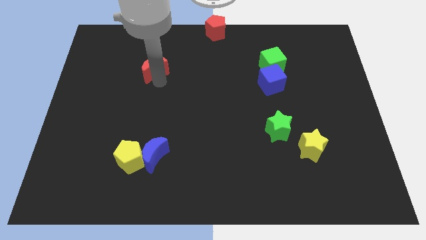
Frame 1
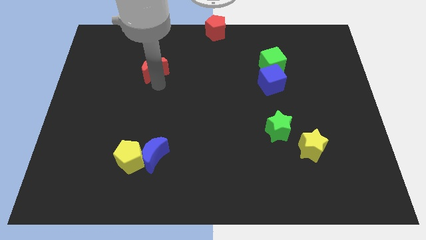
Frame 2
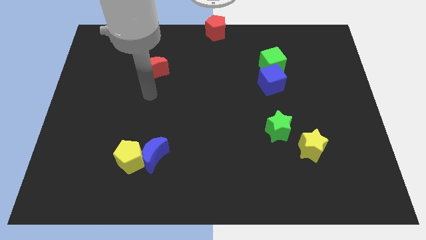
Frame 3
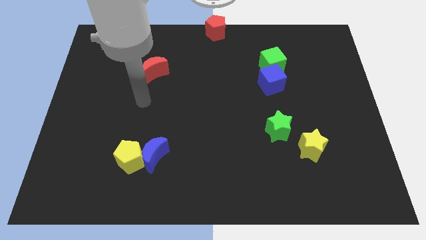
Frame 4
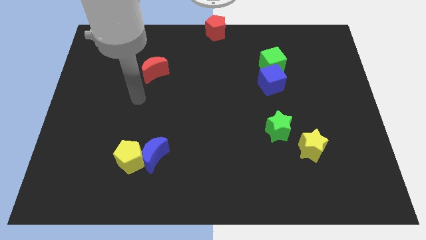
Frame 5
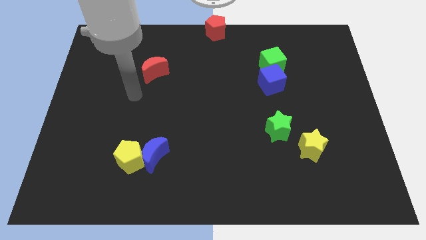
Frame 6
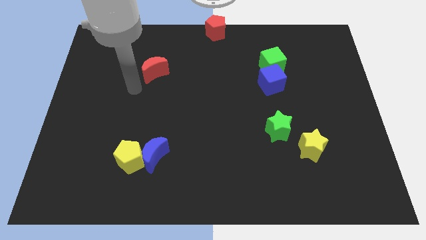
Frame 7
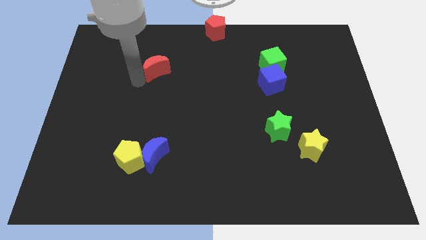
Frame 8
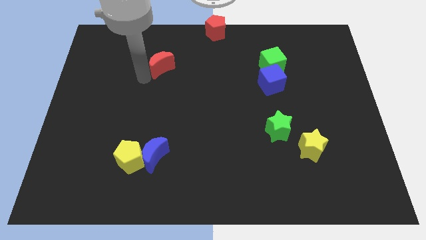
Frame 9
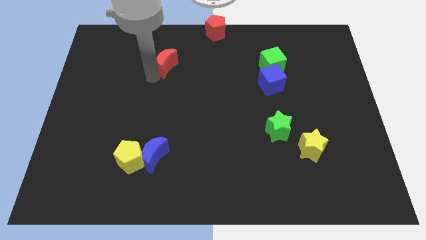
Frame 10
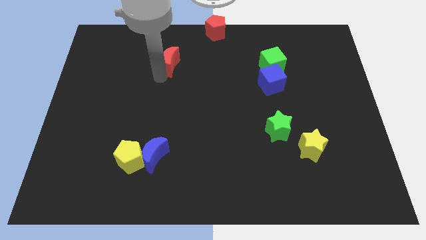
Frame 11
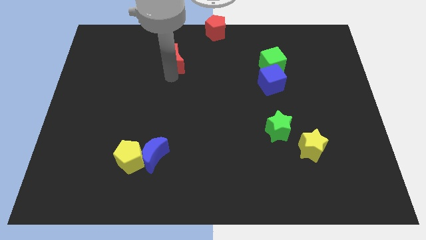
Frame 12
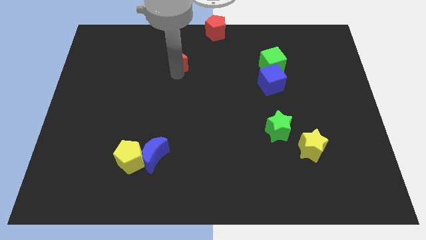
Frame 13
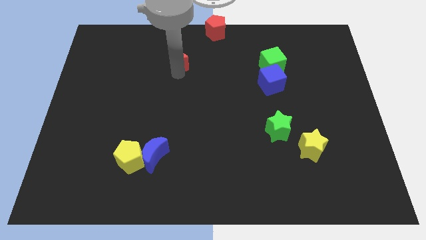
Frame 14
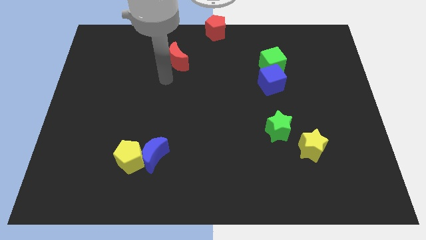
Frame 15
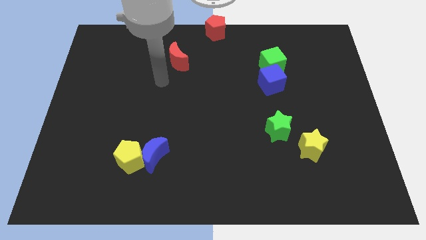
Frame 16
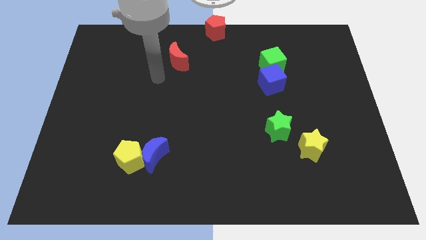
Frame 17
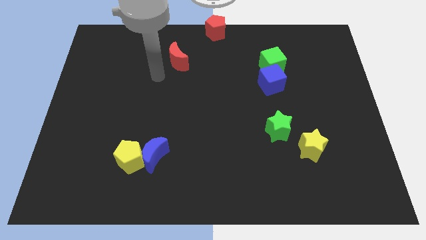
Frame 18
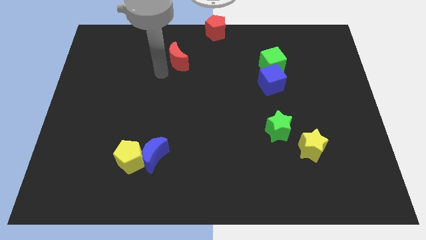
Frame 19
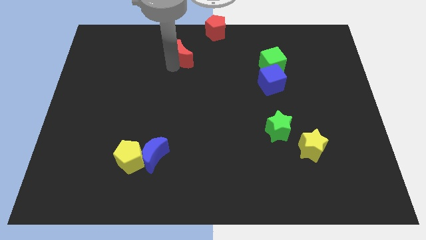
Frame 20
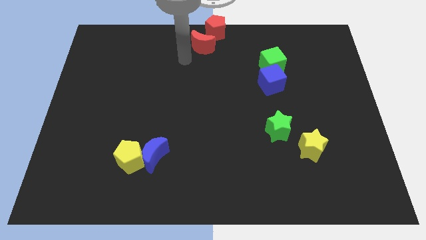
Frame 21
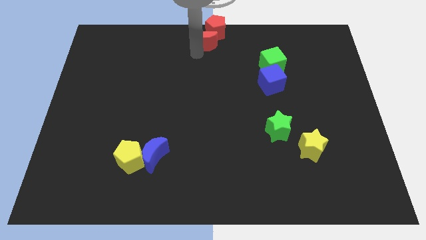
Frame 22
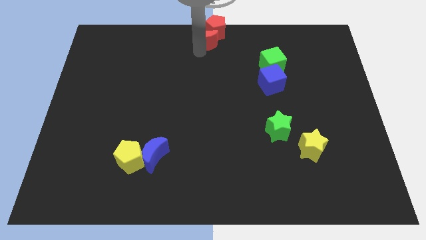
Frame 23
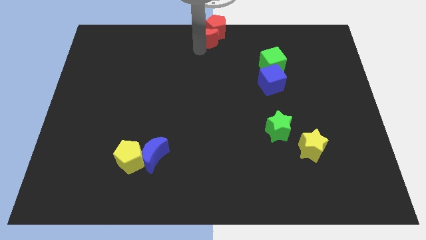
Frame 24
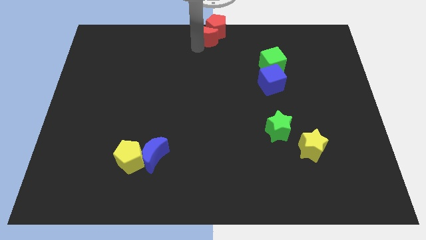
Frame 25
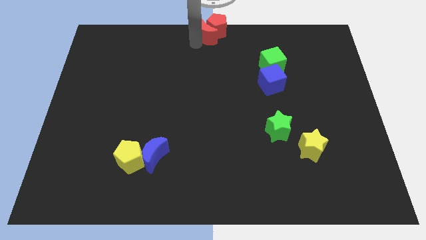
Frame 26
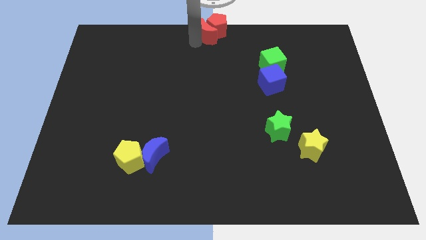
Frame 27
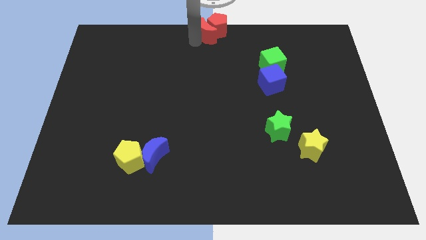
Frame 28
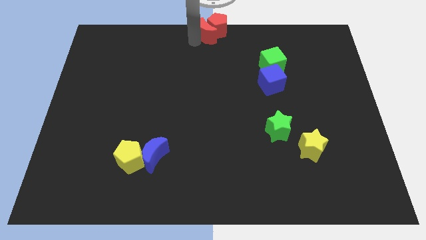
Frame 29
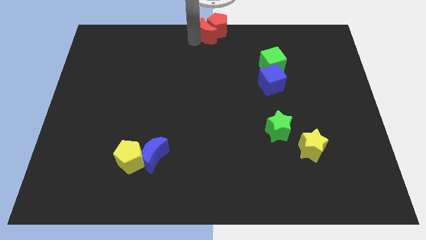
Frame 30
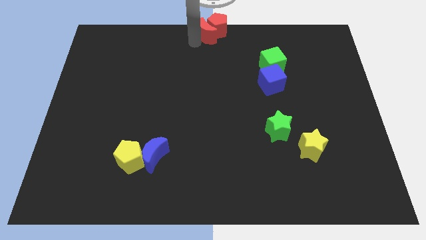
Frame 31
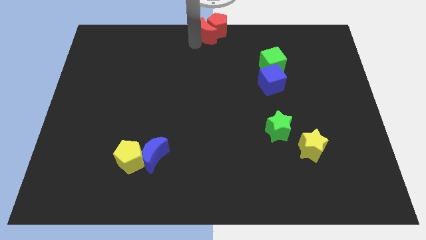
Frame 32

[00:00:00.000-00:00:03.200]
push the red crescent into the red pentagon

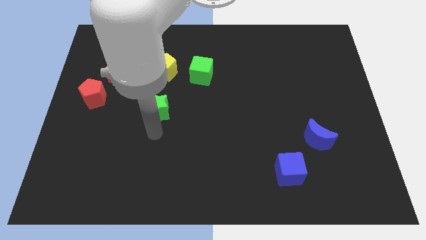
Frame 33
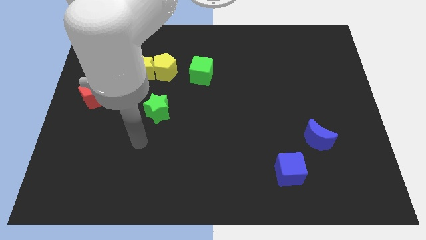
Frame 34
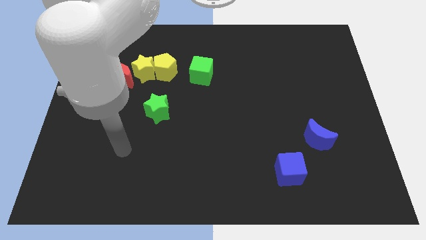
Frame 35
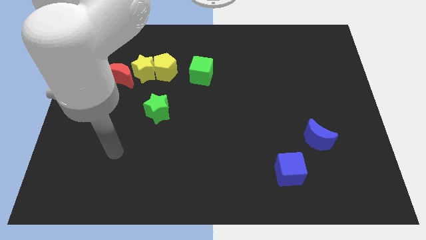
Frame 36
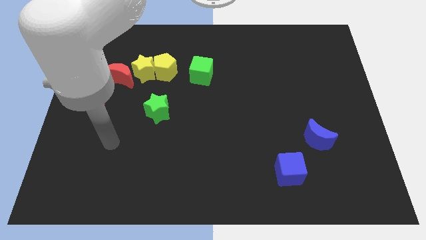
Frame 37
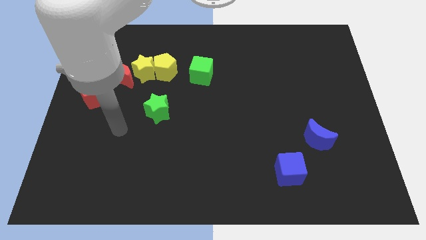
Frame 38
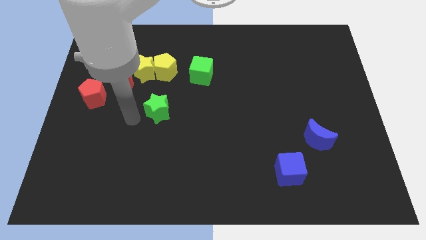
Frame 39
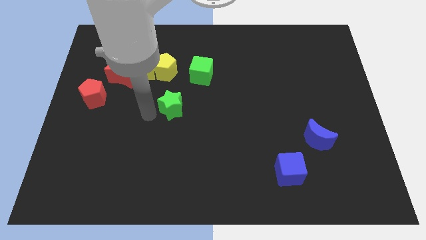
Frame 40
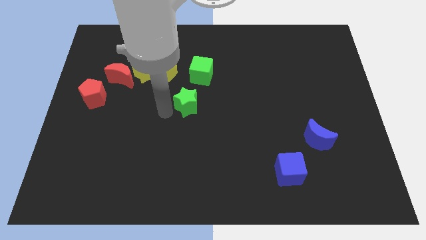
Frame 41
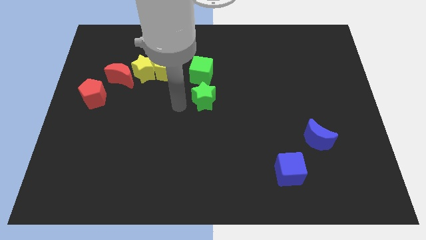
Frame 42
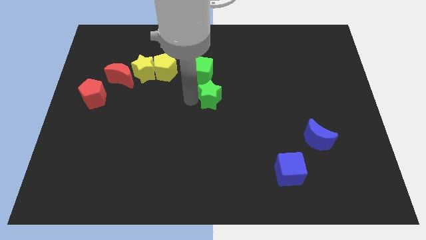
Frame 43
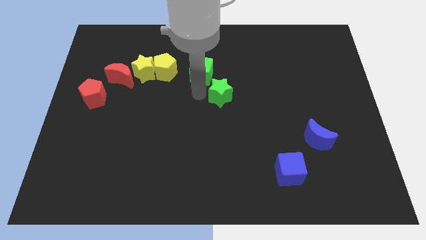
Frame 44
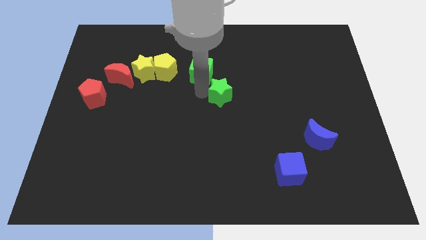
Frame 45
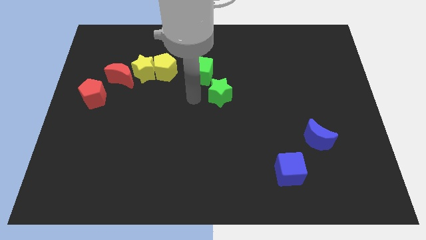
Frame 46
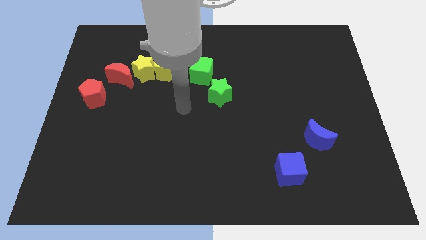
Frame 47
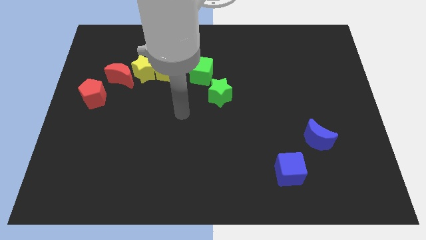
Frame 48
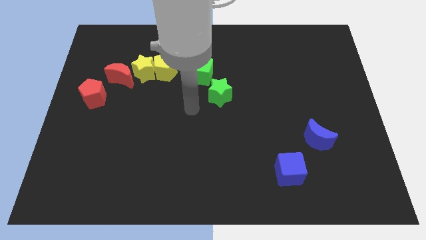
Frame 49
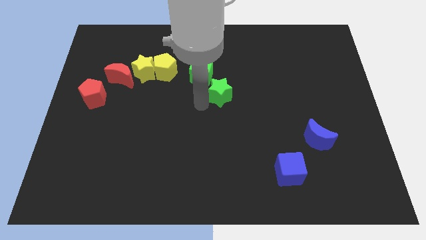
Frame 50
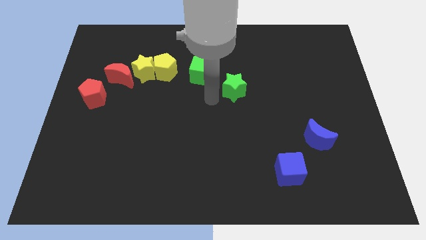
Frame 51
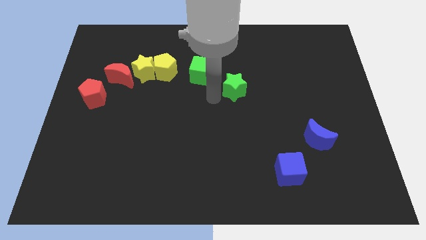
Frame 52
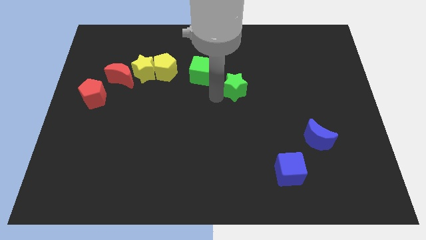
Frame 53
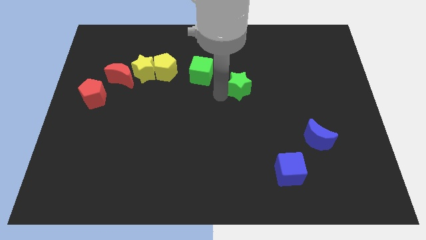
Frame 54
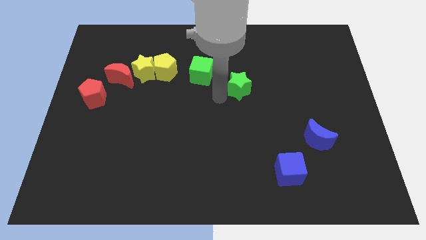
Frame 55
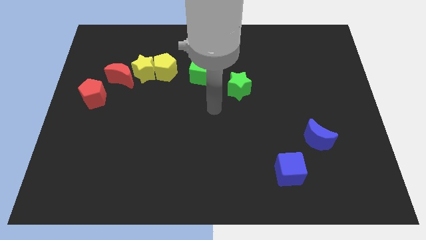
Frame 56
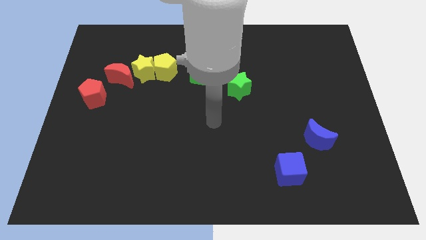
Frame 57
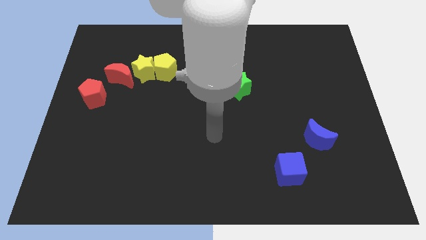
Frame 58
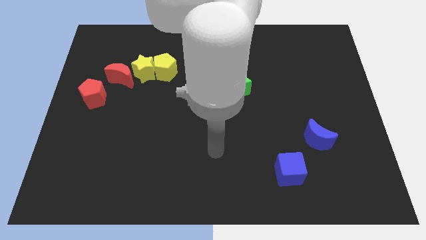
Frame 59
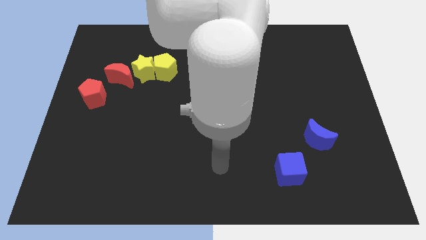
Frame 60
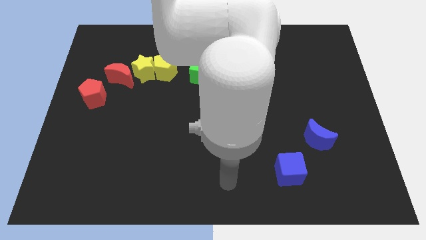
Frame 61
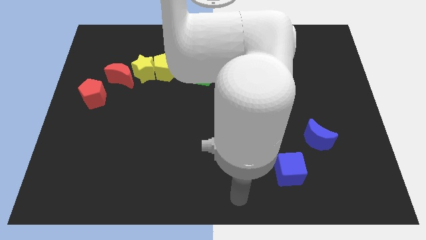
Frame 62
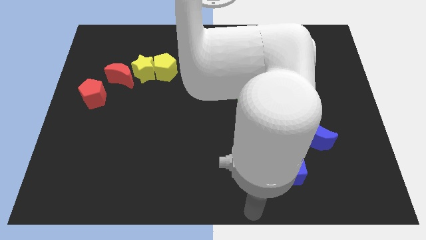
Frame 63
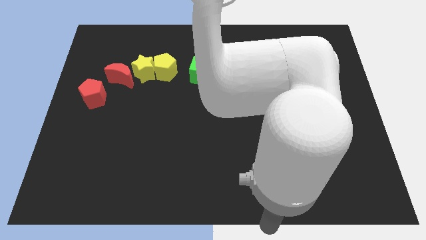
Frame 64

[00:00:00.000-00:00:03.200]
place the green star at the bottom right side of green cube

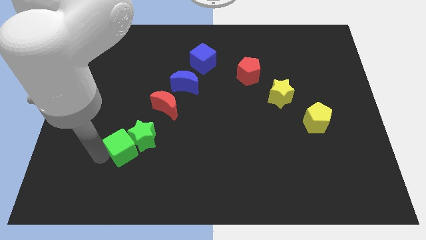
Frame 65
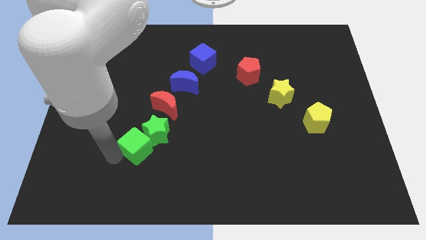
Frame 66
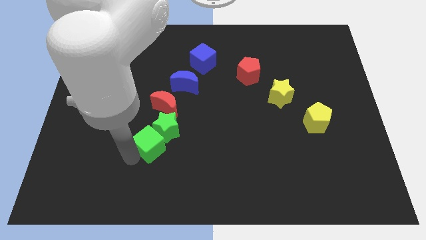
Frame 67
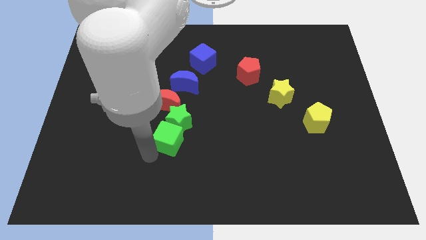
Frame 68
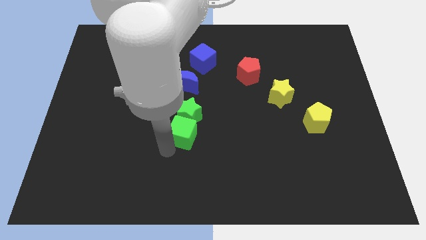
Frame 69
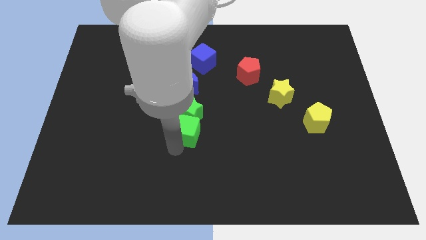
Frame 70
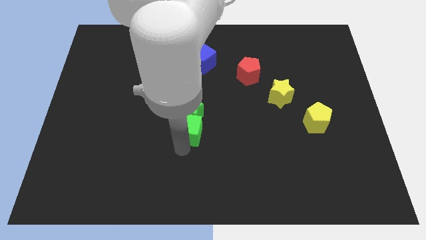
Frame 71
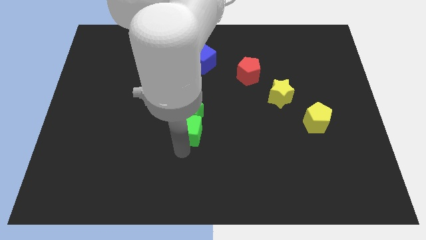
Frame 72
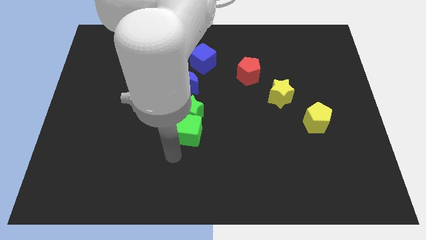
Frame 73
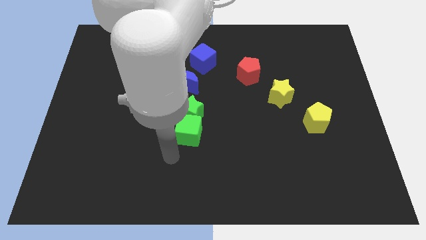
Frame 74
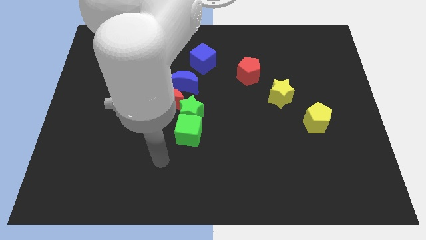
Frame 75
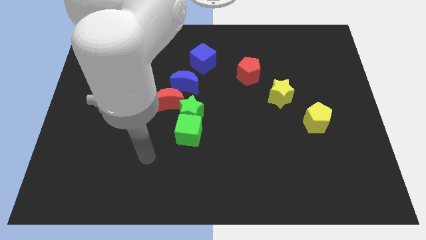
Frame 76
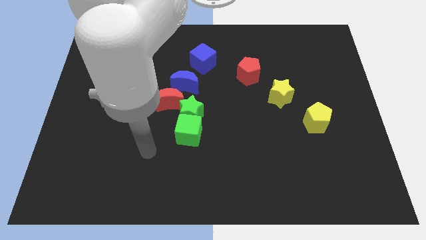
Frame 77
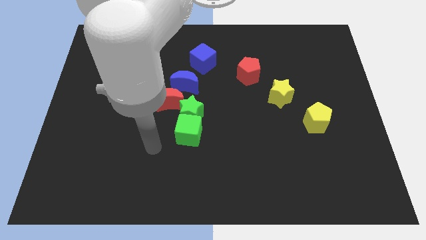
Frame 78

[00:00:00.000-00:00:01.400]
move the green cube along with the green star to the bottom right to the red crescent

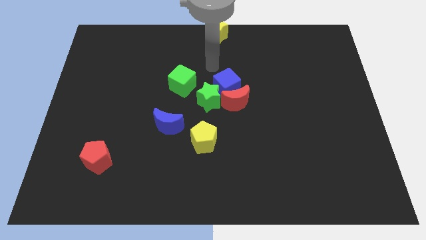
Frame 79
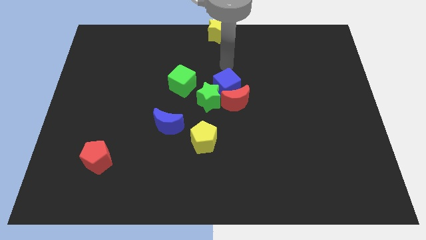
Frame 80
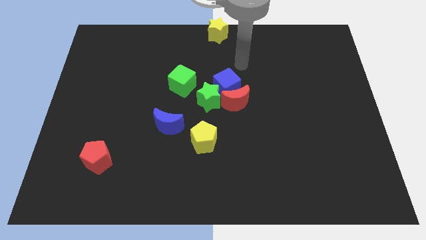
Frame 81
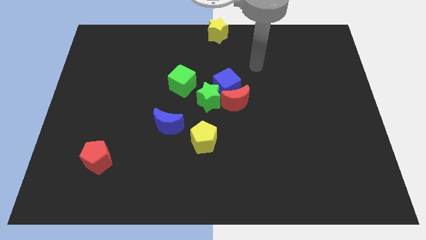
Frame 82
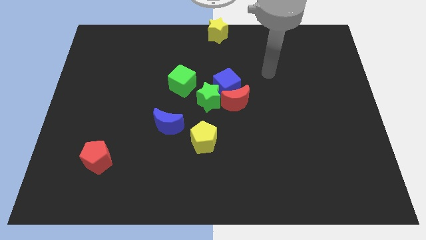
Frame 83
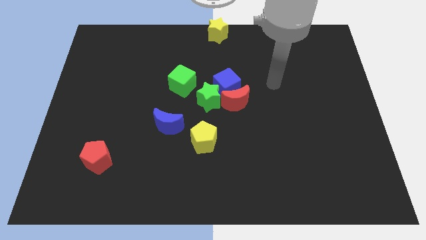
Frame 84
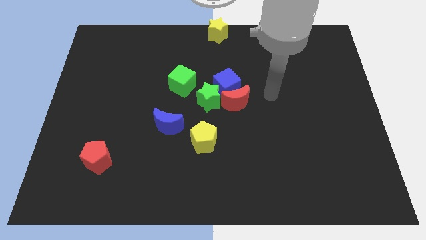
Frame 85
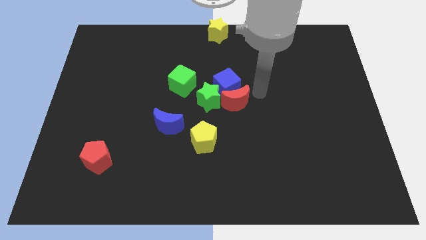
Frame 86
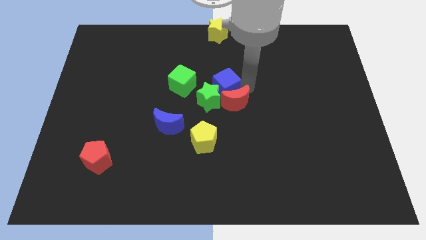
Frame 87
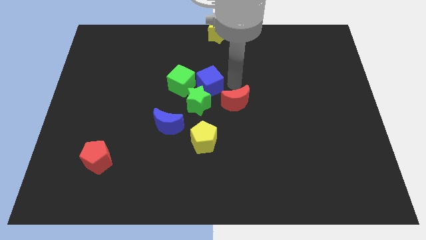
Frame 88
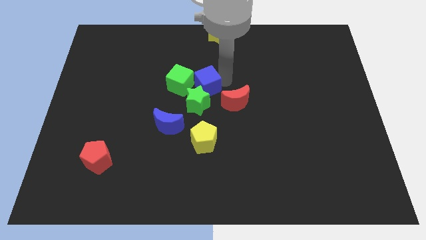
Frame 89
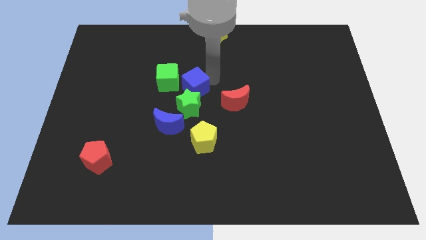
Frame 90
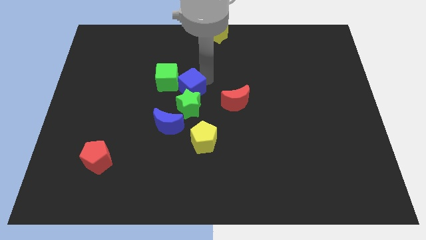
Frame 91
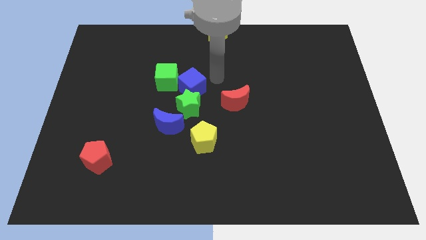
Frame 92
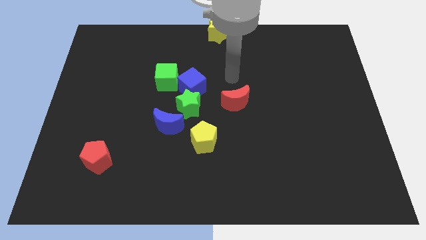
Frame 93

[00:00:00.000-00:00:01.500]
push blue cube right side towards the green cube
